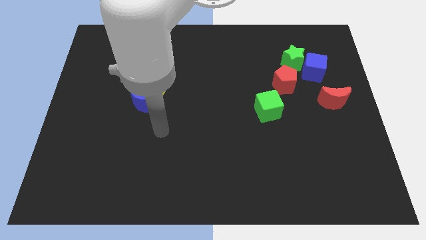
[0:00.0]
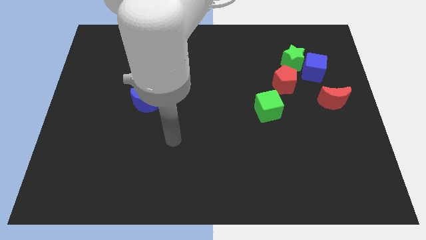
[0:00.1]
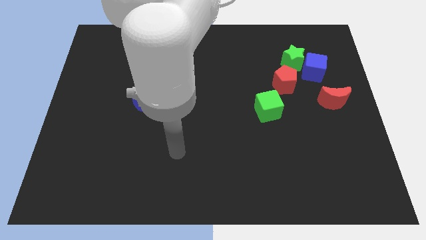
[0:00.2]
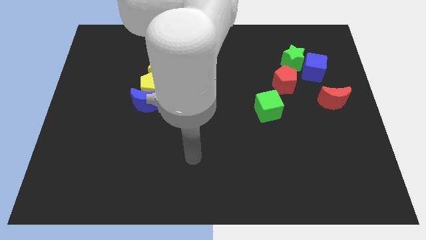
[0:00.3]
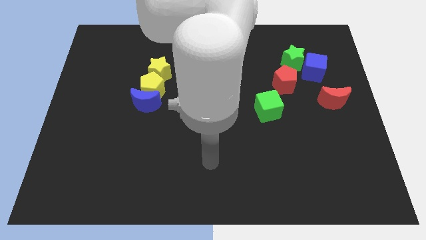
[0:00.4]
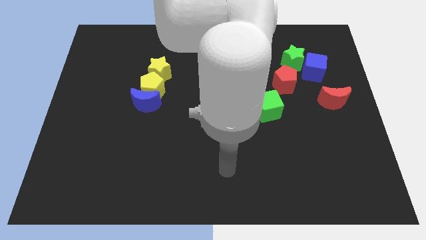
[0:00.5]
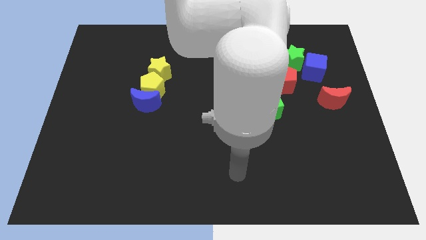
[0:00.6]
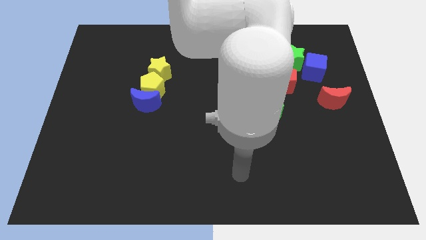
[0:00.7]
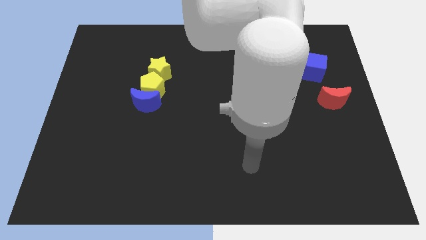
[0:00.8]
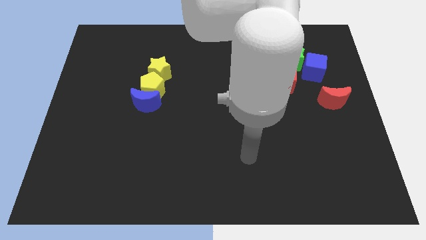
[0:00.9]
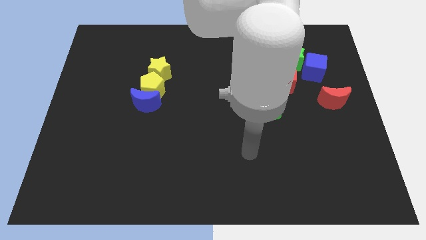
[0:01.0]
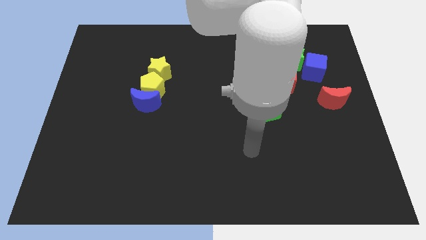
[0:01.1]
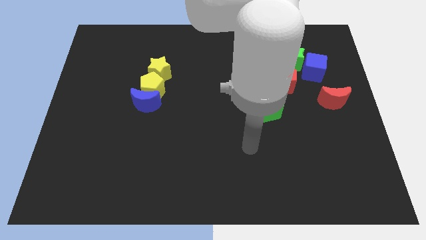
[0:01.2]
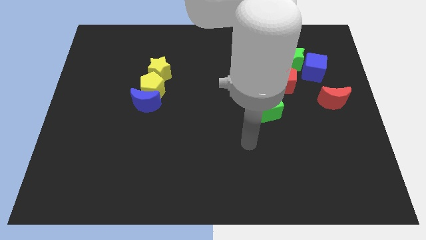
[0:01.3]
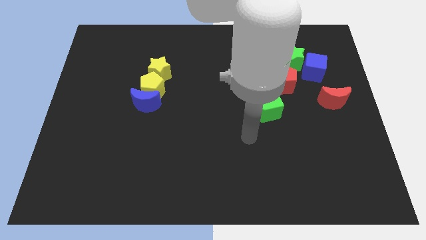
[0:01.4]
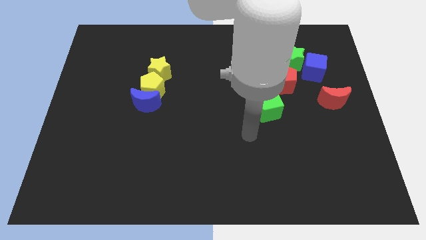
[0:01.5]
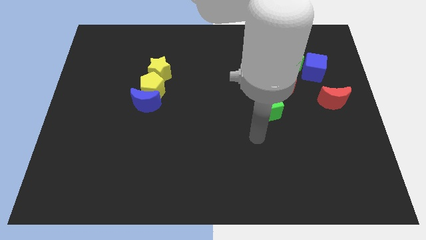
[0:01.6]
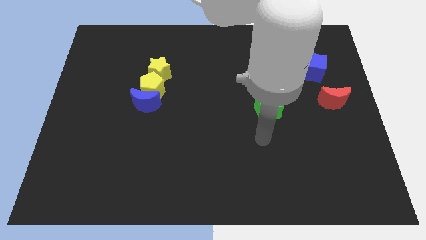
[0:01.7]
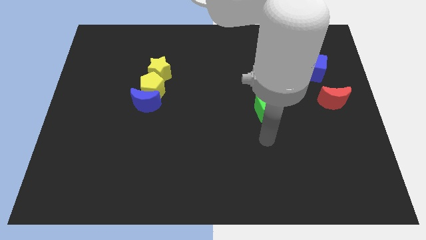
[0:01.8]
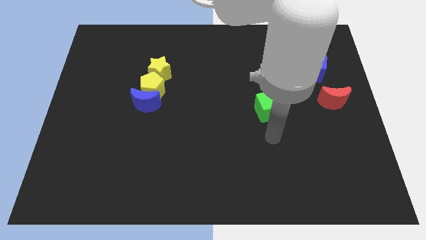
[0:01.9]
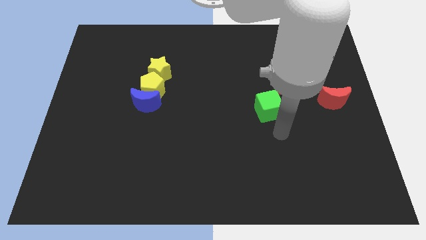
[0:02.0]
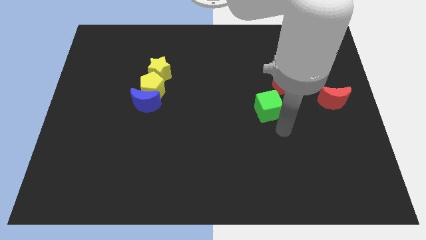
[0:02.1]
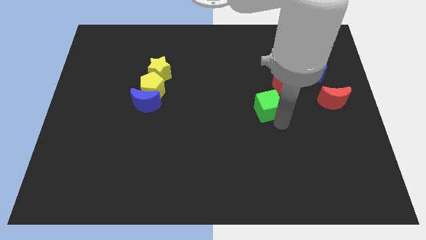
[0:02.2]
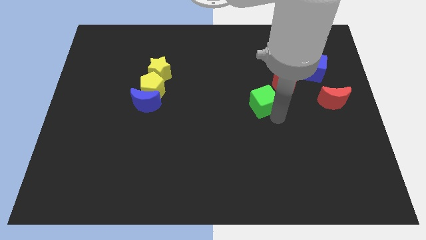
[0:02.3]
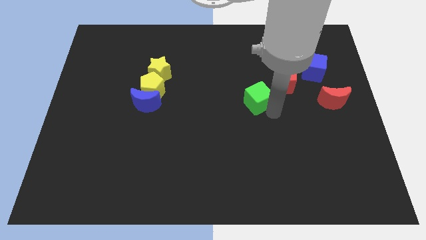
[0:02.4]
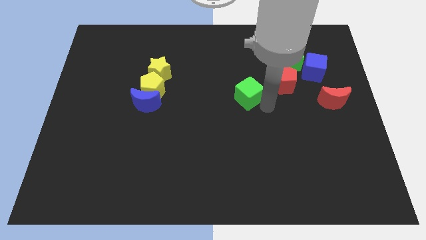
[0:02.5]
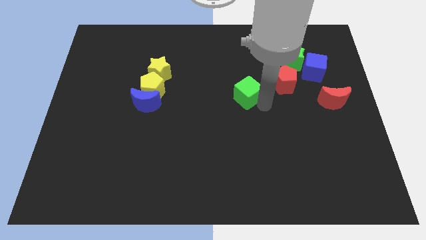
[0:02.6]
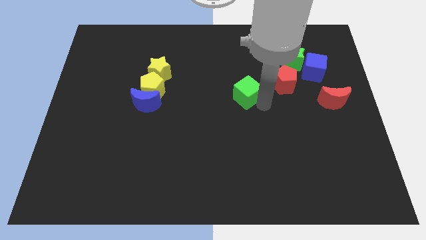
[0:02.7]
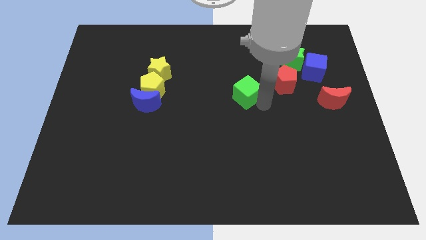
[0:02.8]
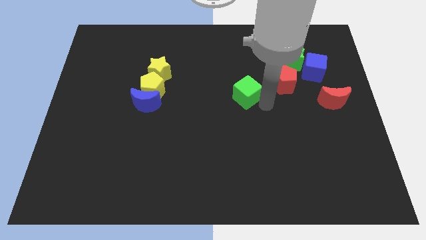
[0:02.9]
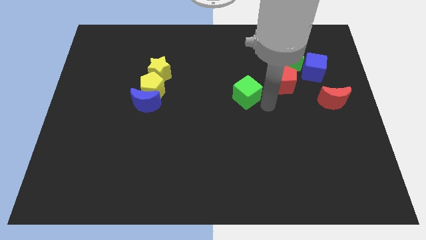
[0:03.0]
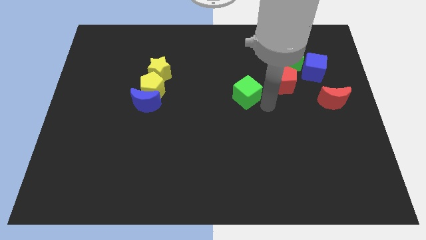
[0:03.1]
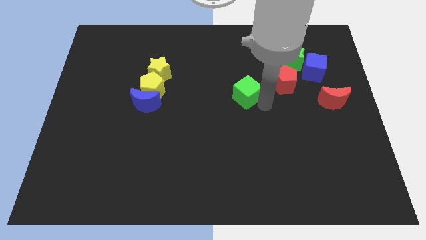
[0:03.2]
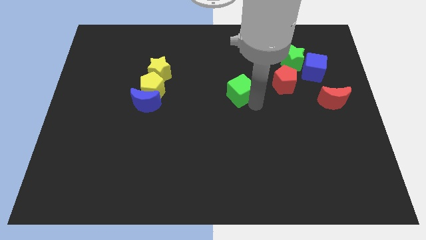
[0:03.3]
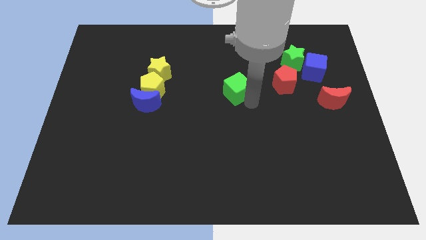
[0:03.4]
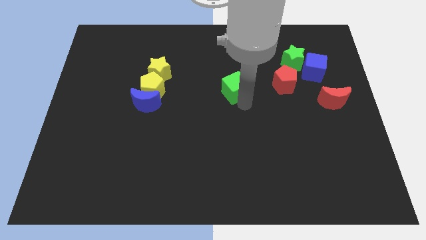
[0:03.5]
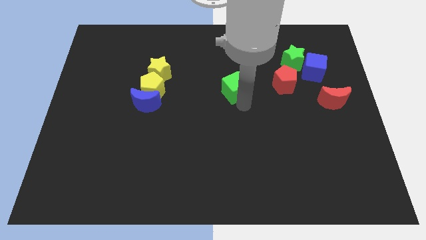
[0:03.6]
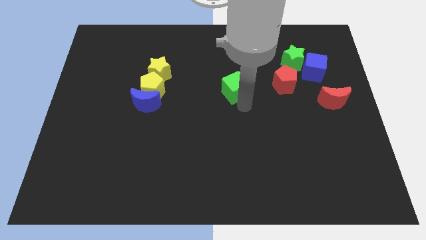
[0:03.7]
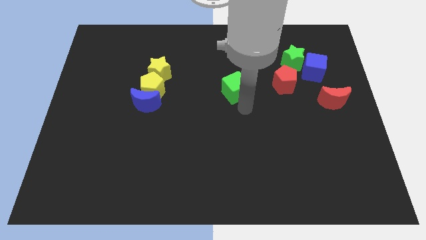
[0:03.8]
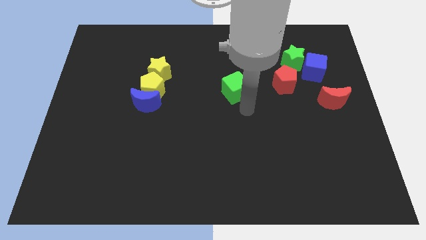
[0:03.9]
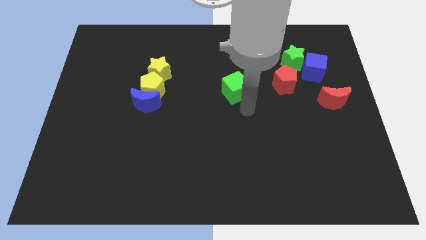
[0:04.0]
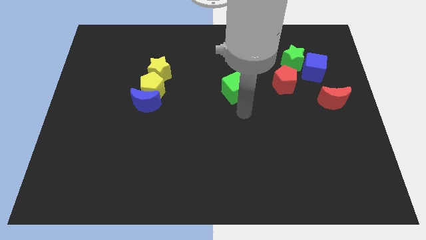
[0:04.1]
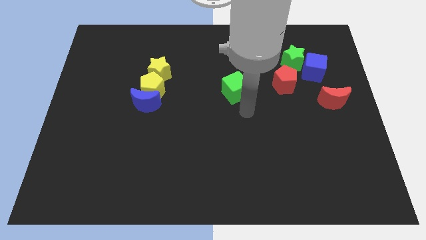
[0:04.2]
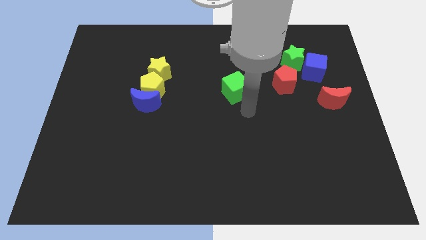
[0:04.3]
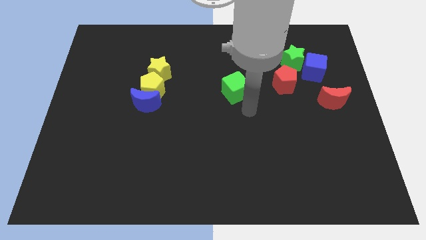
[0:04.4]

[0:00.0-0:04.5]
place the green cube towards the top left

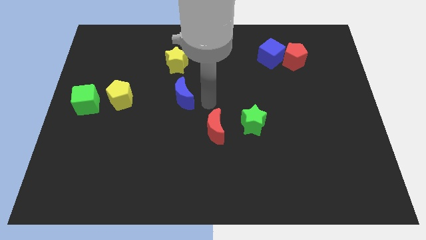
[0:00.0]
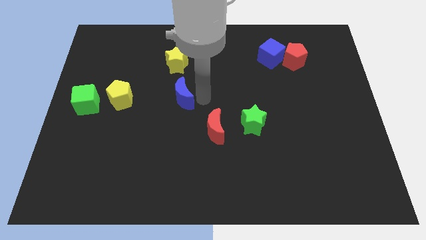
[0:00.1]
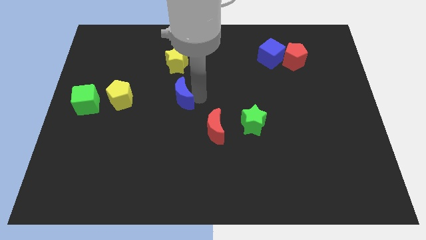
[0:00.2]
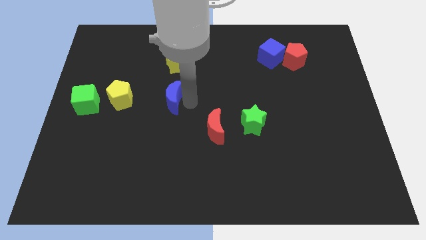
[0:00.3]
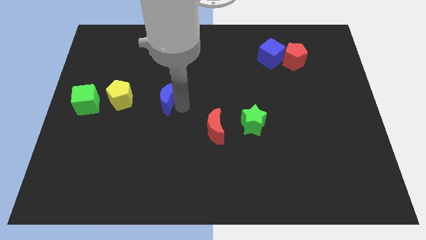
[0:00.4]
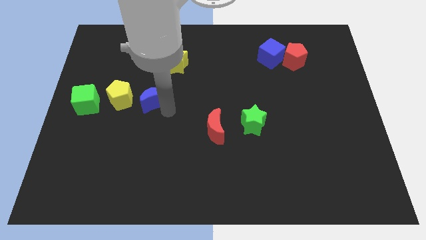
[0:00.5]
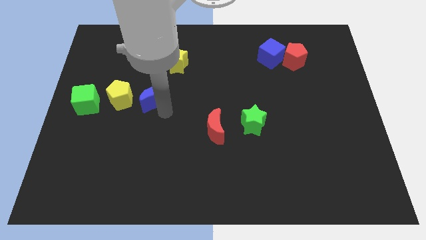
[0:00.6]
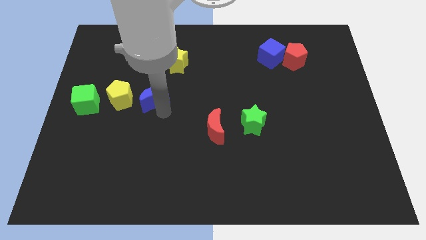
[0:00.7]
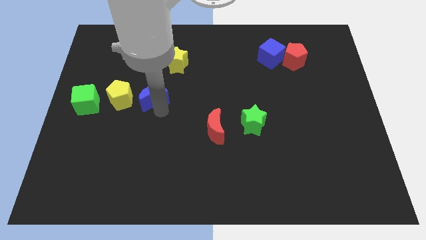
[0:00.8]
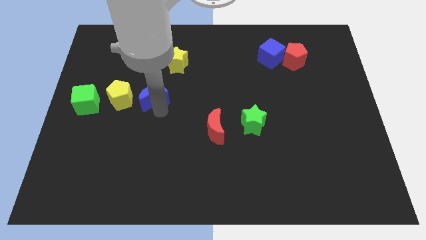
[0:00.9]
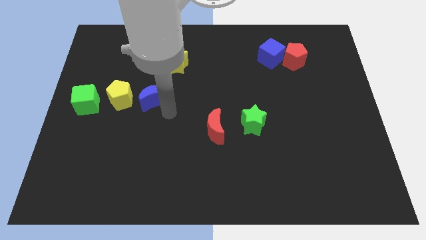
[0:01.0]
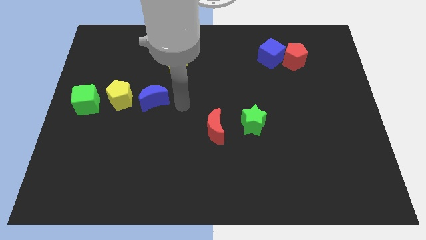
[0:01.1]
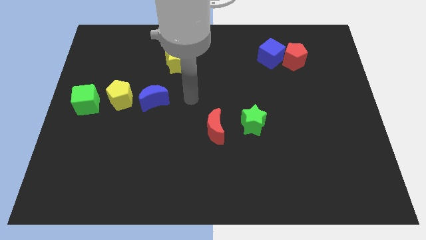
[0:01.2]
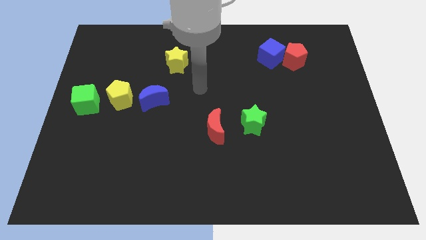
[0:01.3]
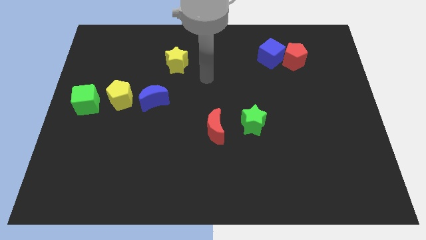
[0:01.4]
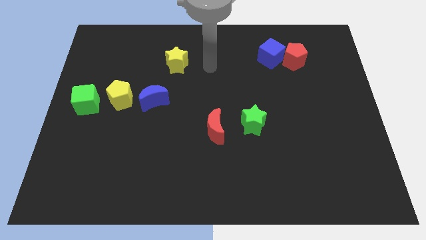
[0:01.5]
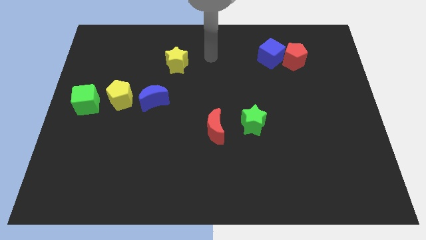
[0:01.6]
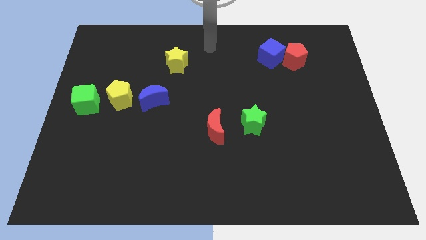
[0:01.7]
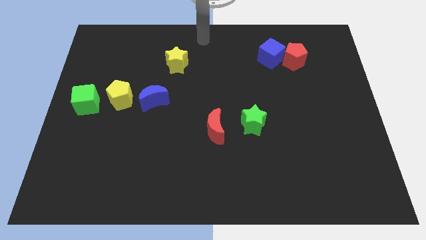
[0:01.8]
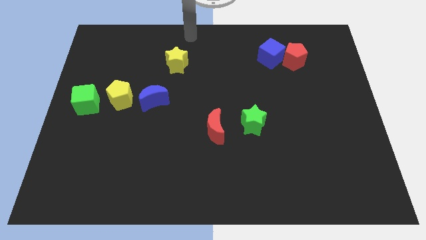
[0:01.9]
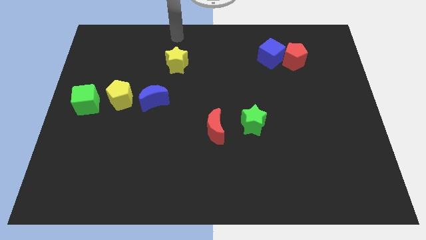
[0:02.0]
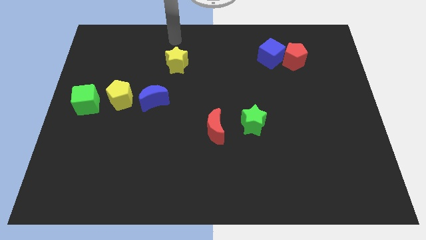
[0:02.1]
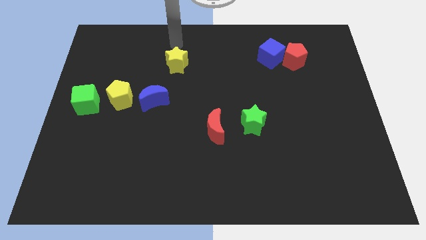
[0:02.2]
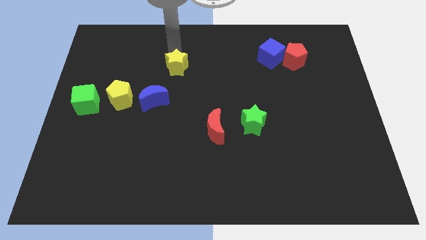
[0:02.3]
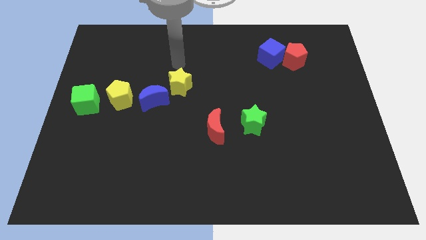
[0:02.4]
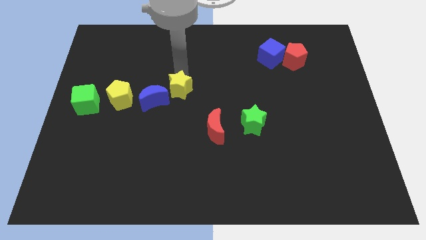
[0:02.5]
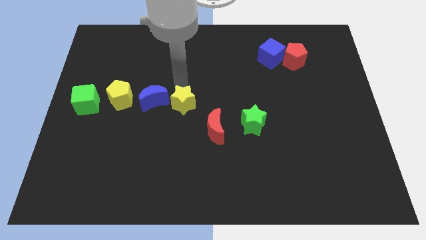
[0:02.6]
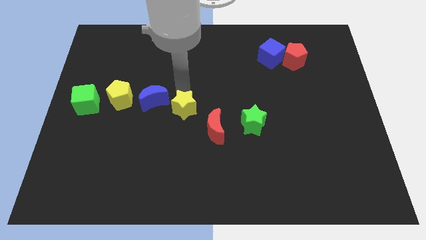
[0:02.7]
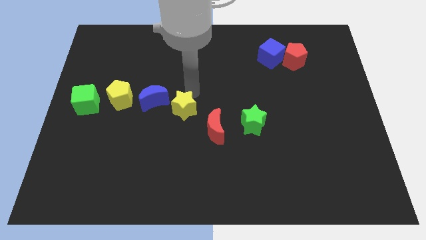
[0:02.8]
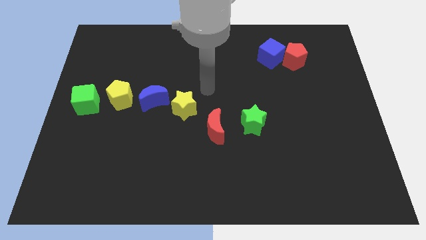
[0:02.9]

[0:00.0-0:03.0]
place yellow star right to the blue moon

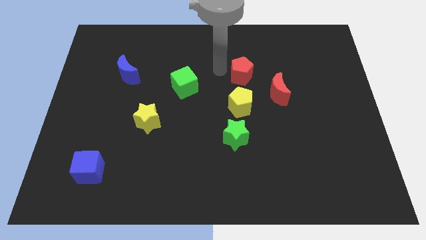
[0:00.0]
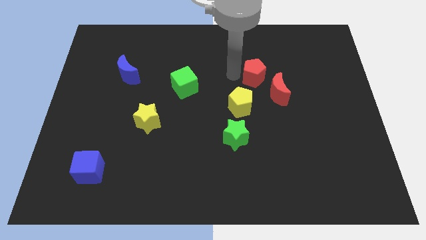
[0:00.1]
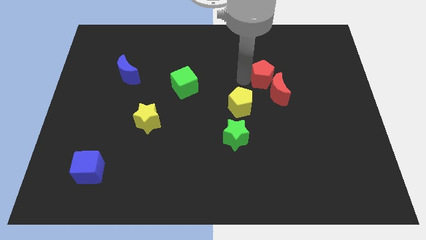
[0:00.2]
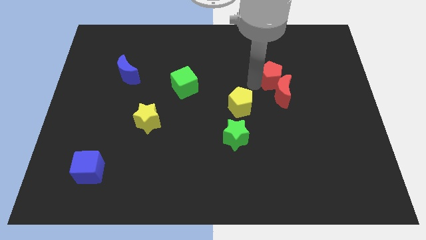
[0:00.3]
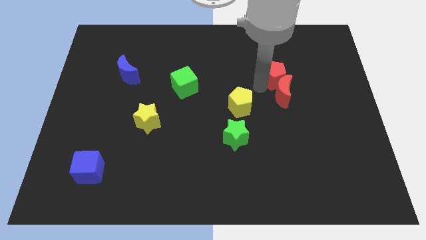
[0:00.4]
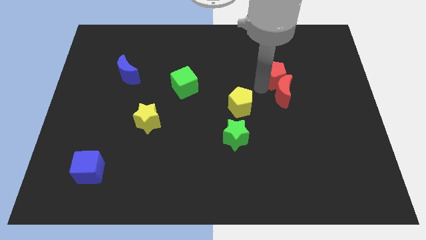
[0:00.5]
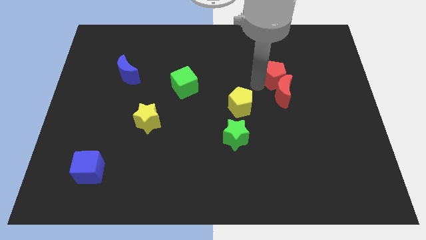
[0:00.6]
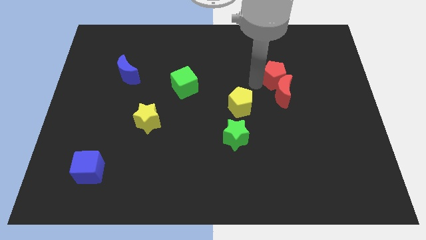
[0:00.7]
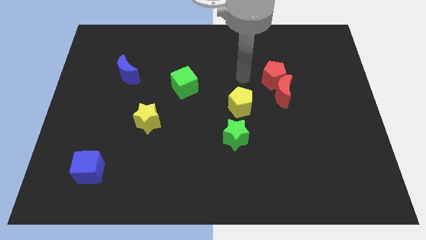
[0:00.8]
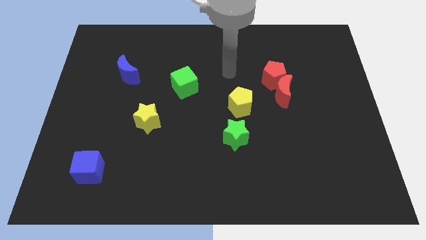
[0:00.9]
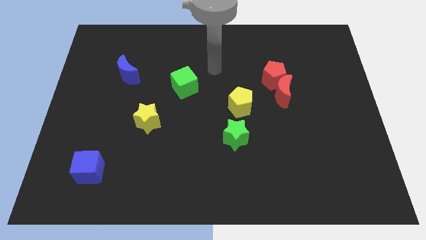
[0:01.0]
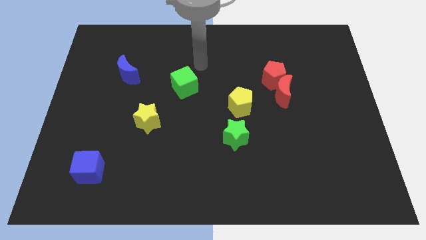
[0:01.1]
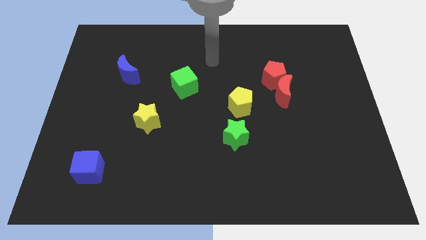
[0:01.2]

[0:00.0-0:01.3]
push the red pentagon into the red moon

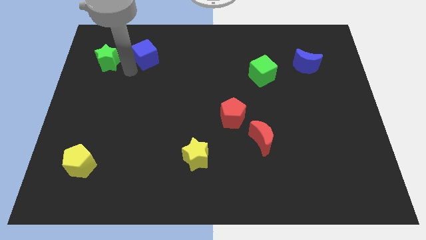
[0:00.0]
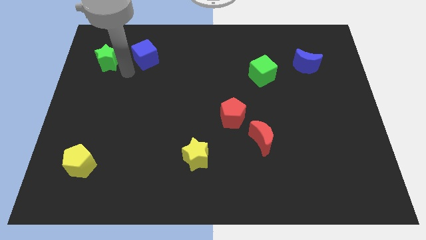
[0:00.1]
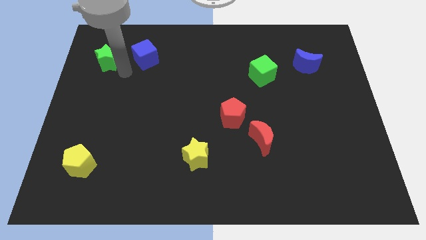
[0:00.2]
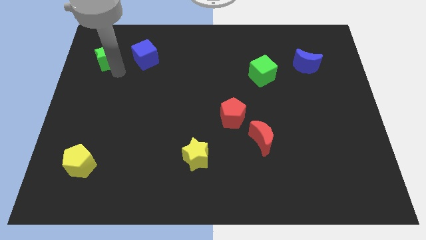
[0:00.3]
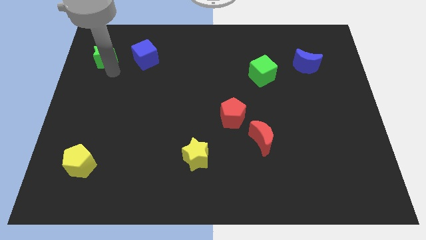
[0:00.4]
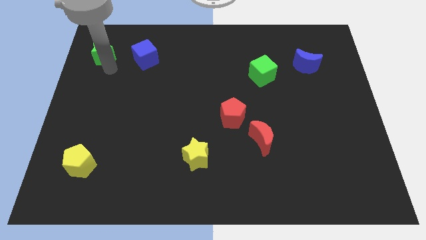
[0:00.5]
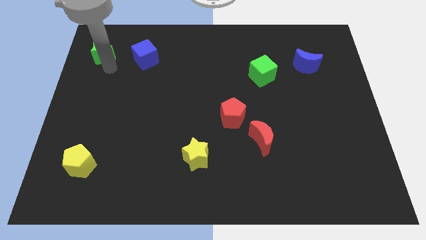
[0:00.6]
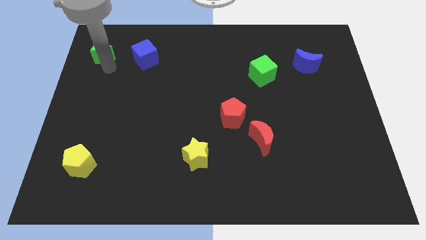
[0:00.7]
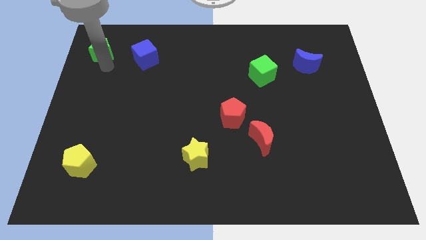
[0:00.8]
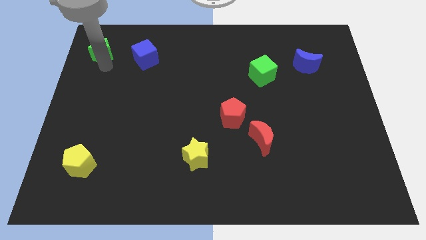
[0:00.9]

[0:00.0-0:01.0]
move green star to the top left corner
